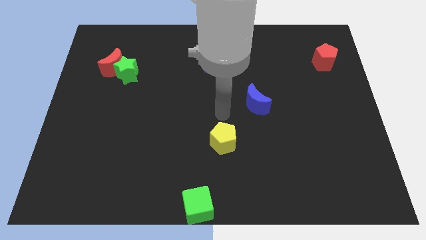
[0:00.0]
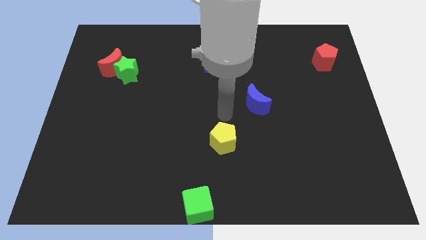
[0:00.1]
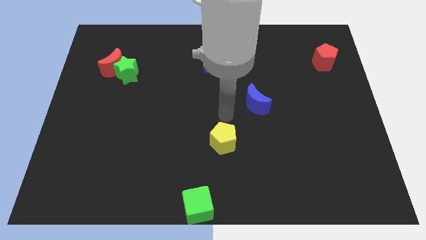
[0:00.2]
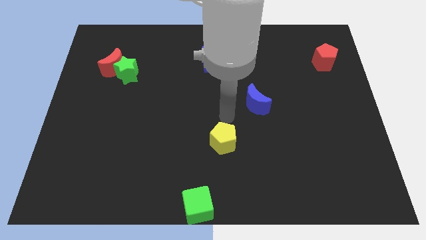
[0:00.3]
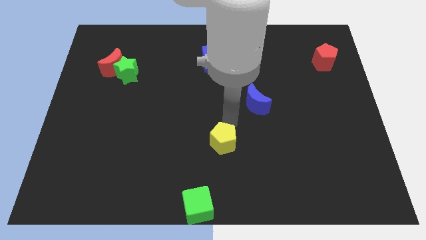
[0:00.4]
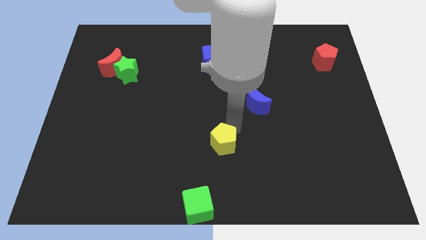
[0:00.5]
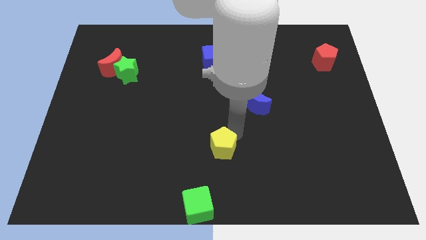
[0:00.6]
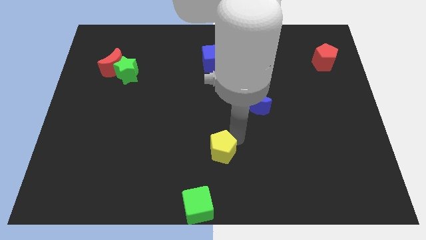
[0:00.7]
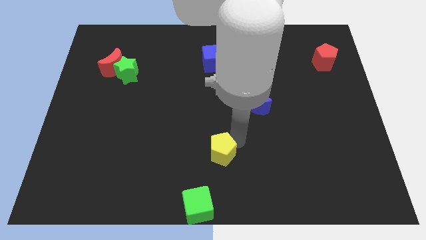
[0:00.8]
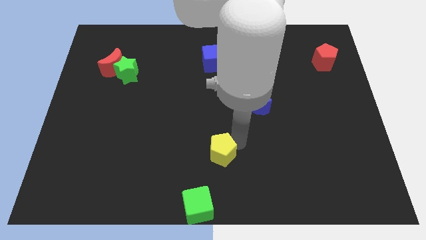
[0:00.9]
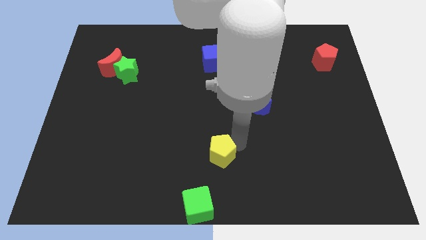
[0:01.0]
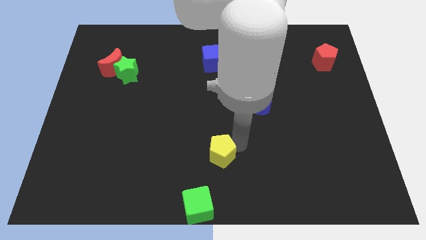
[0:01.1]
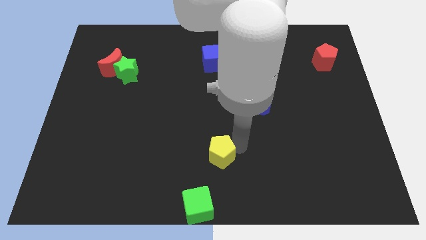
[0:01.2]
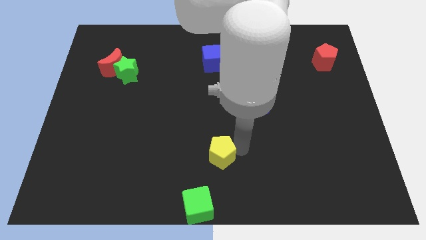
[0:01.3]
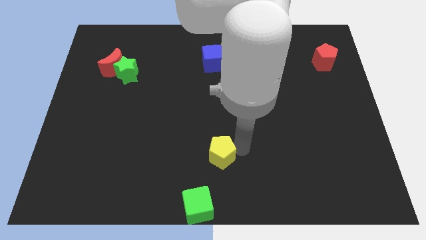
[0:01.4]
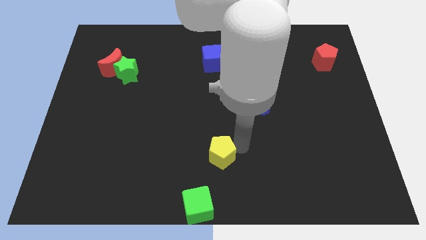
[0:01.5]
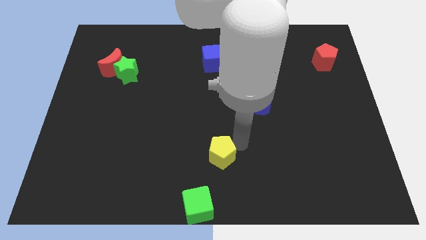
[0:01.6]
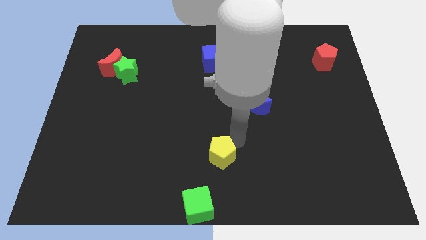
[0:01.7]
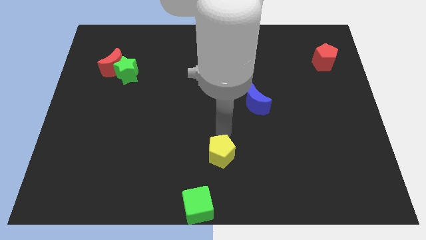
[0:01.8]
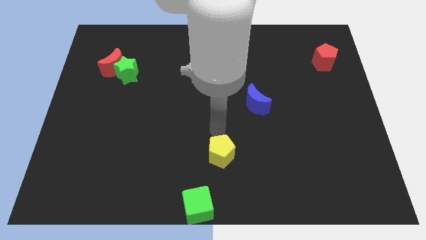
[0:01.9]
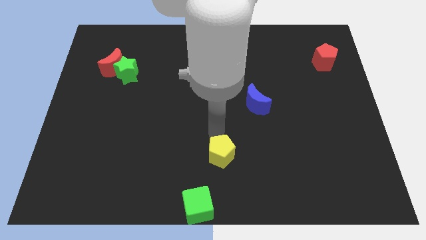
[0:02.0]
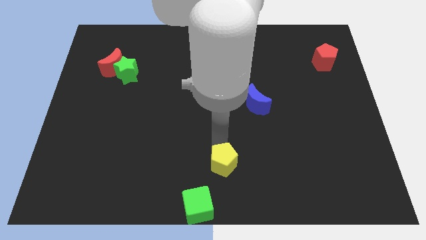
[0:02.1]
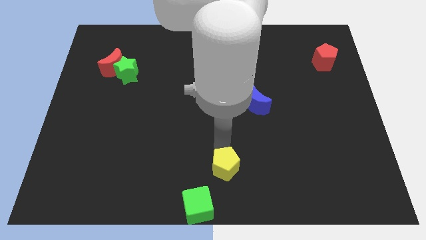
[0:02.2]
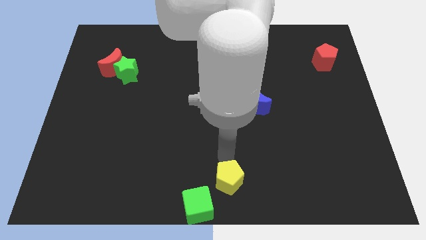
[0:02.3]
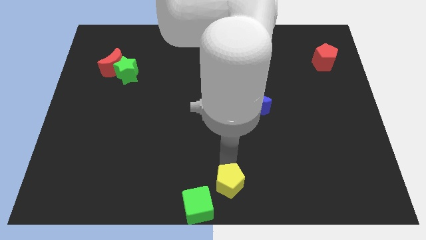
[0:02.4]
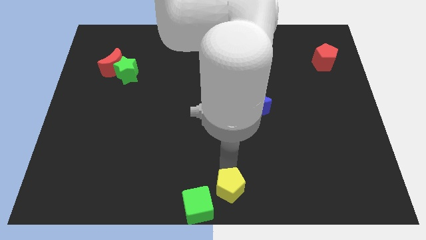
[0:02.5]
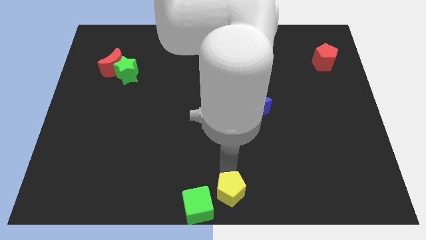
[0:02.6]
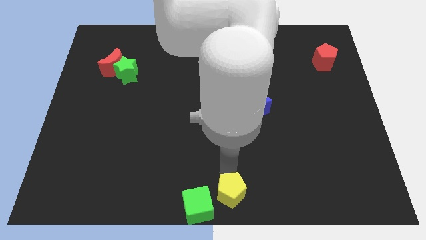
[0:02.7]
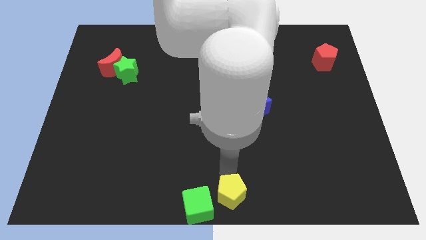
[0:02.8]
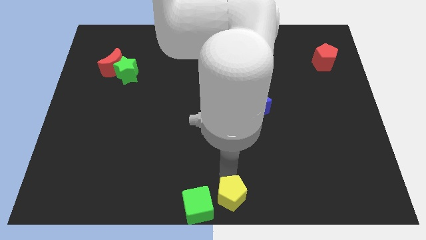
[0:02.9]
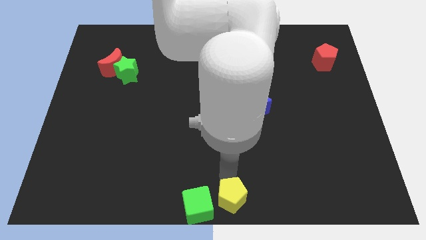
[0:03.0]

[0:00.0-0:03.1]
push the yellow pentagon to the left of green cube

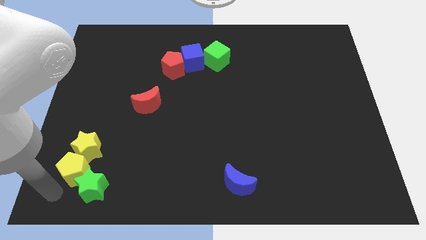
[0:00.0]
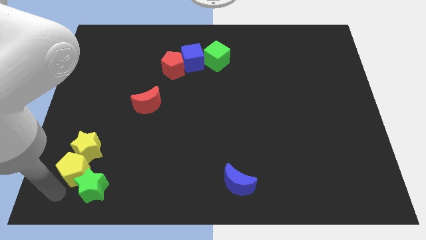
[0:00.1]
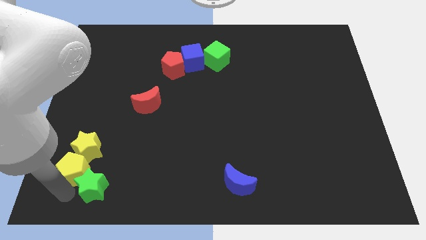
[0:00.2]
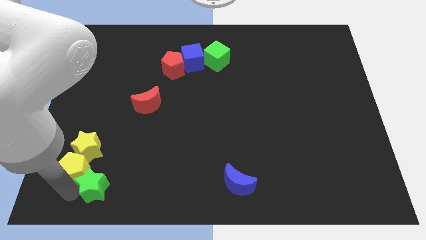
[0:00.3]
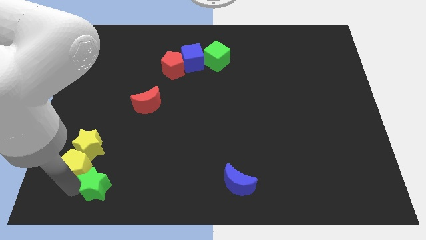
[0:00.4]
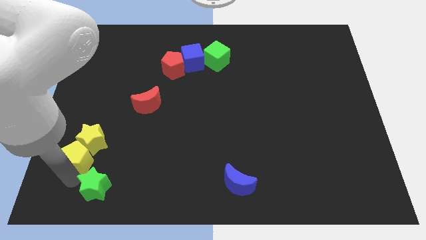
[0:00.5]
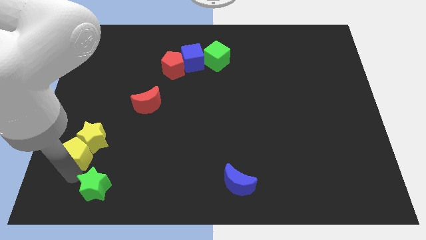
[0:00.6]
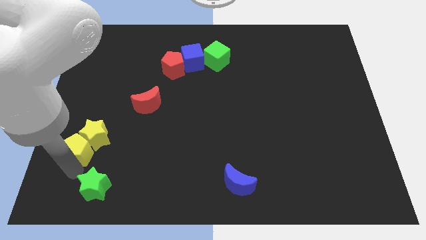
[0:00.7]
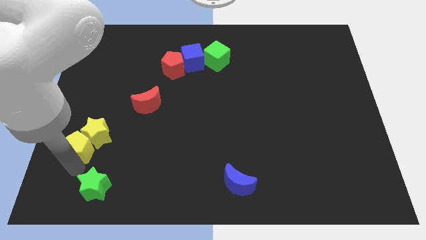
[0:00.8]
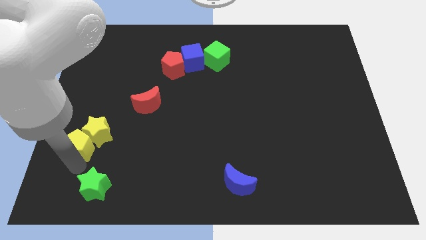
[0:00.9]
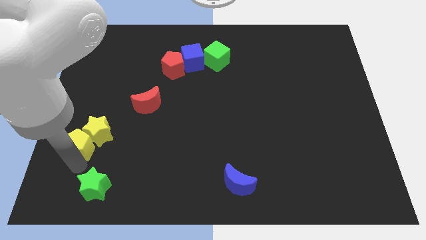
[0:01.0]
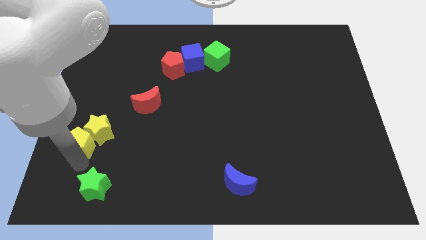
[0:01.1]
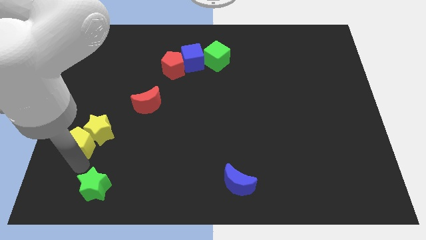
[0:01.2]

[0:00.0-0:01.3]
separate yellow blocks from green star

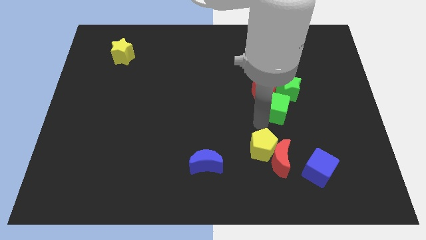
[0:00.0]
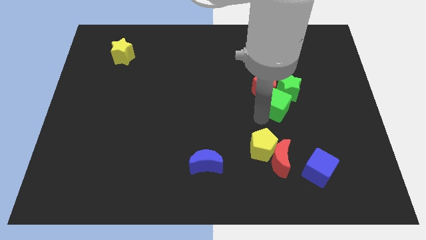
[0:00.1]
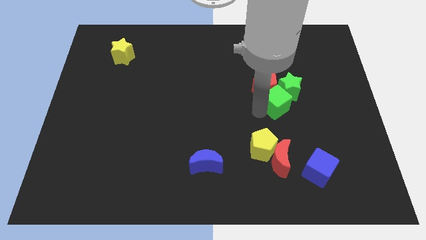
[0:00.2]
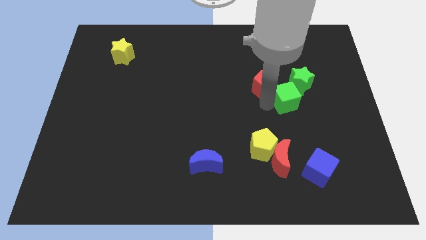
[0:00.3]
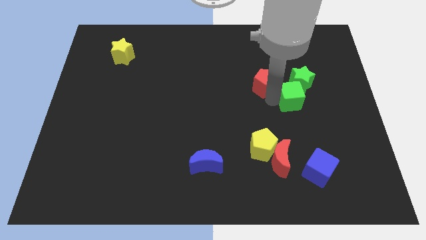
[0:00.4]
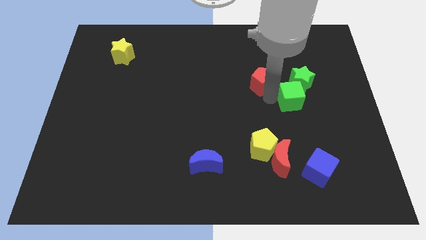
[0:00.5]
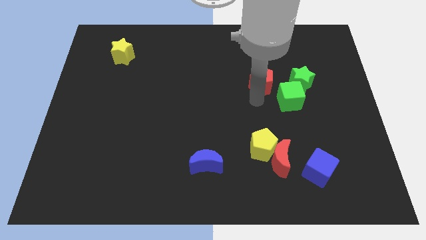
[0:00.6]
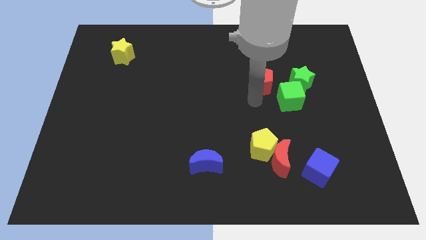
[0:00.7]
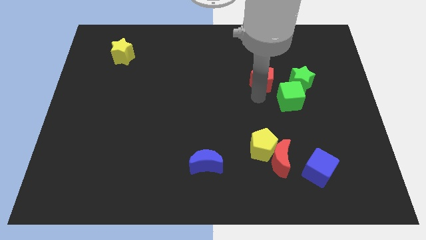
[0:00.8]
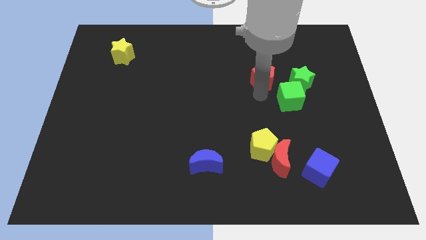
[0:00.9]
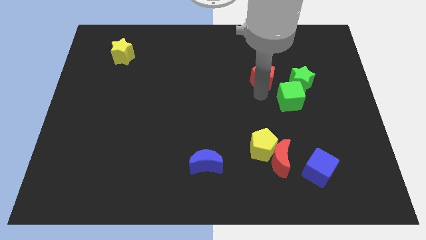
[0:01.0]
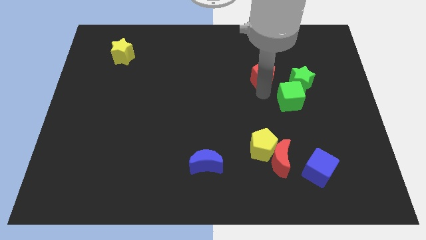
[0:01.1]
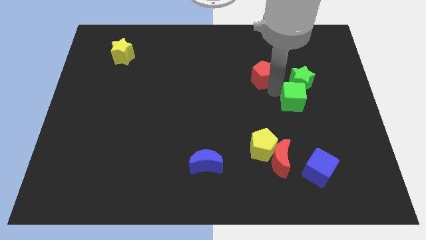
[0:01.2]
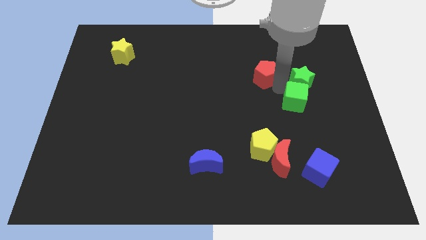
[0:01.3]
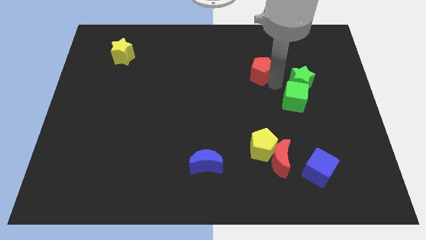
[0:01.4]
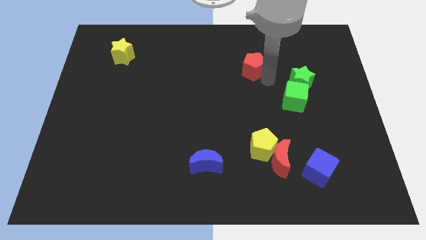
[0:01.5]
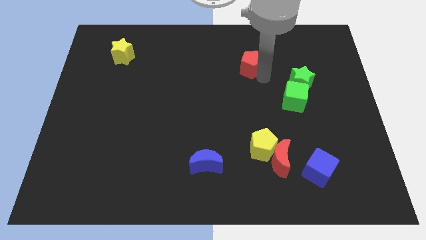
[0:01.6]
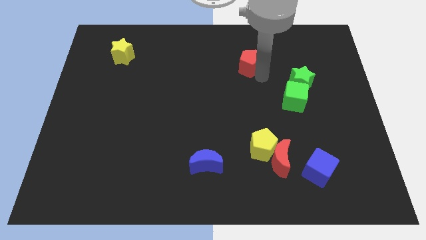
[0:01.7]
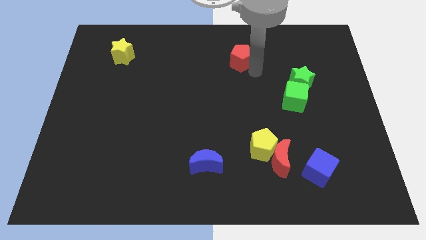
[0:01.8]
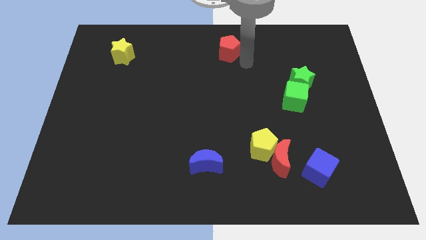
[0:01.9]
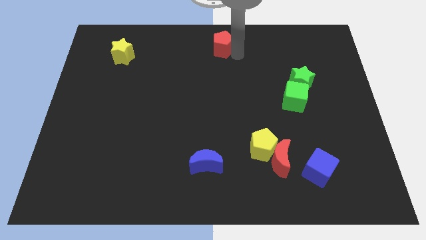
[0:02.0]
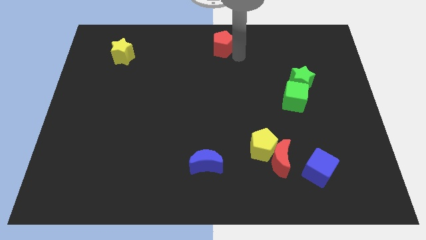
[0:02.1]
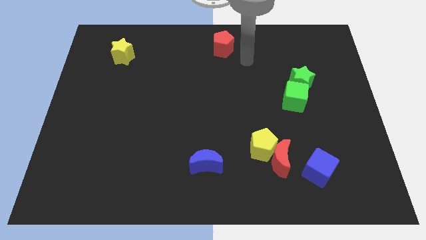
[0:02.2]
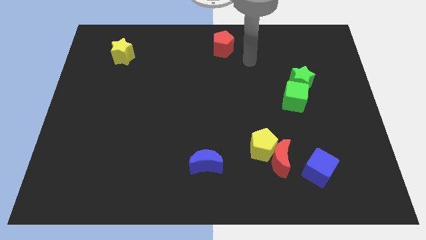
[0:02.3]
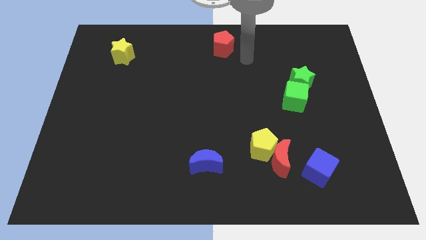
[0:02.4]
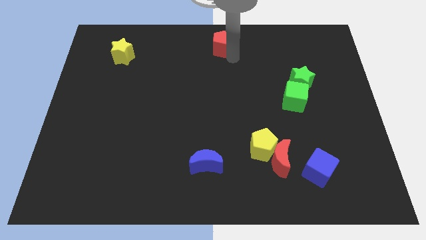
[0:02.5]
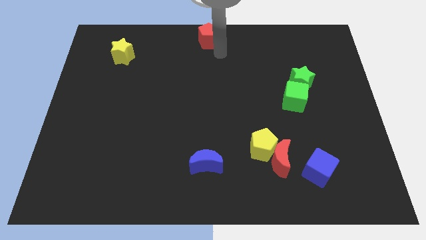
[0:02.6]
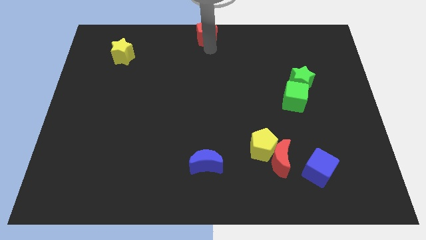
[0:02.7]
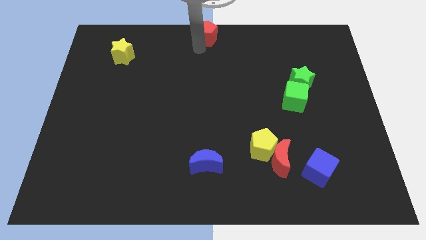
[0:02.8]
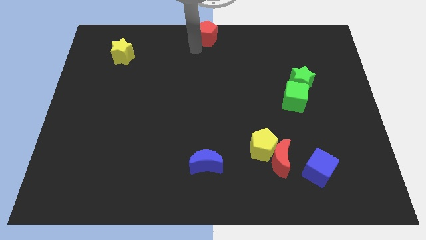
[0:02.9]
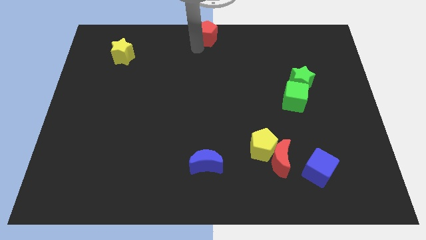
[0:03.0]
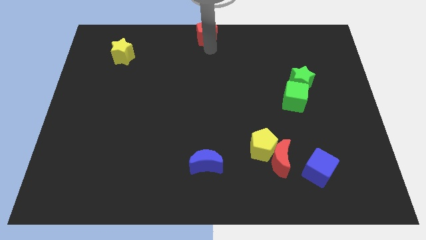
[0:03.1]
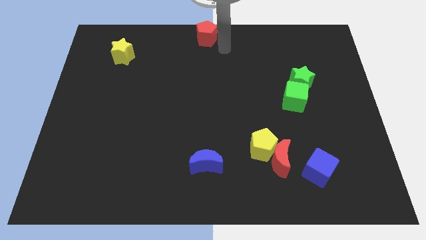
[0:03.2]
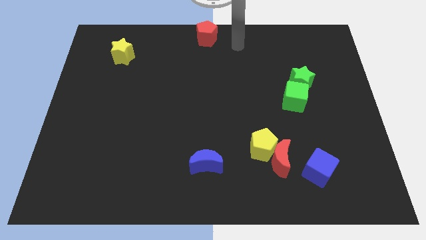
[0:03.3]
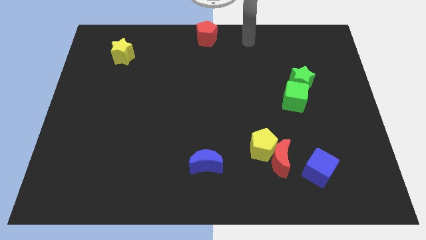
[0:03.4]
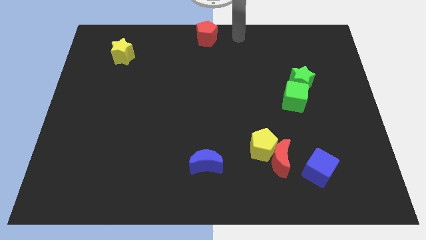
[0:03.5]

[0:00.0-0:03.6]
push red pentagon above blue crescent

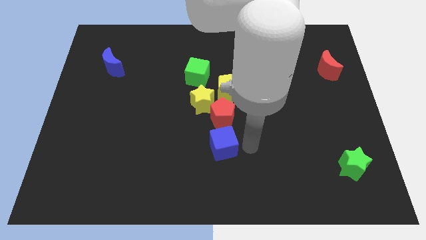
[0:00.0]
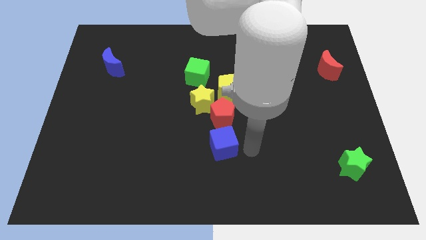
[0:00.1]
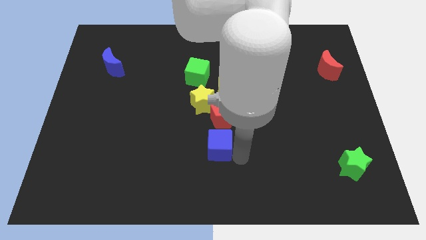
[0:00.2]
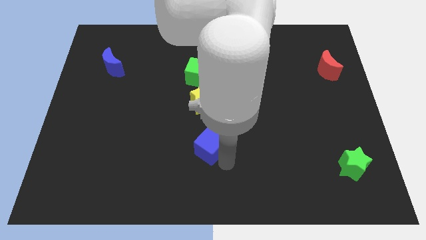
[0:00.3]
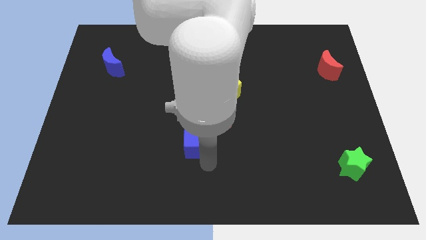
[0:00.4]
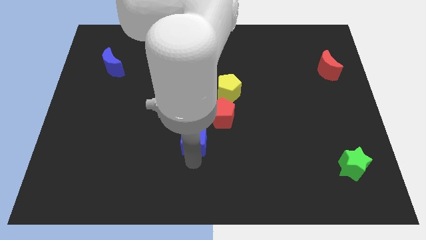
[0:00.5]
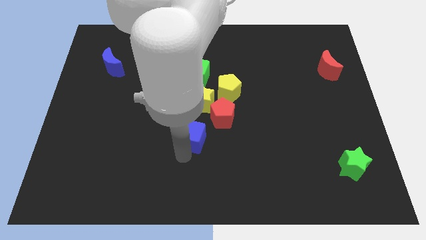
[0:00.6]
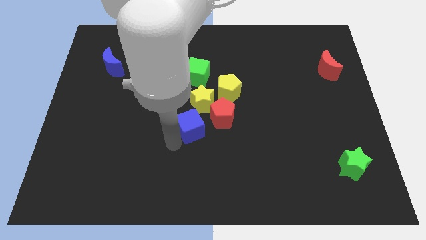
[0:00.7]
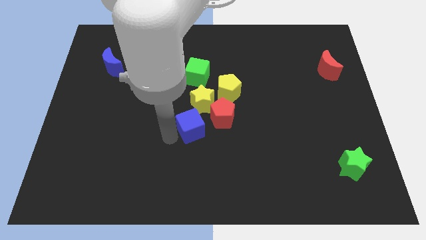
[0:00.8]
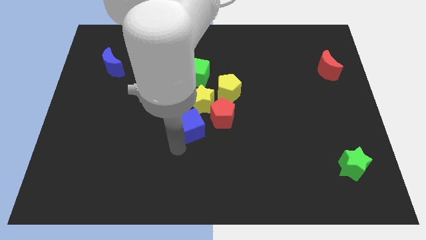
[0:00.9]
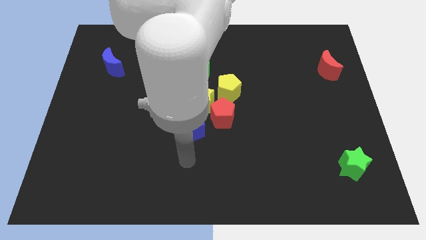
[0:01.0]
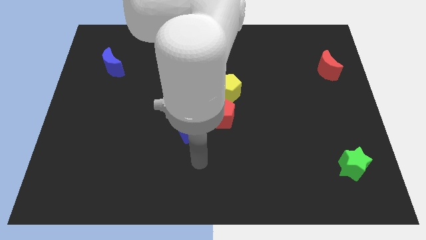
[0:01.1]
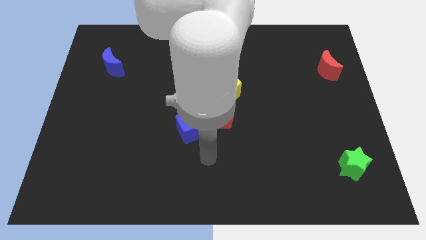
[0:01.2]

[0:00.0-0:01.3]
push the blue cube to the bottom of the yellow star
